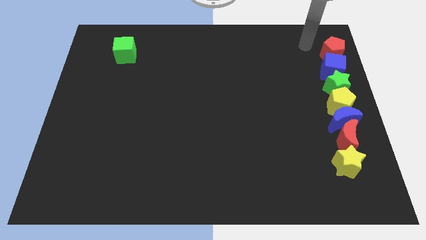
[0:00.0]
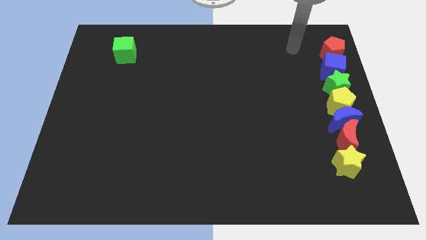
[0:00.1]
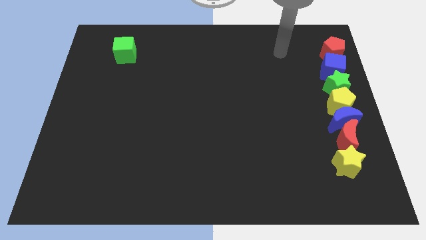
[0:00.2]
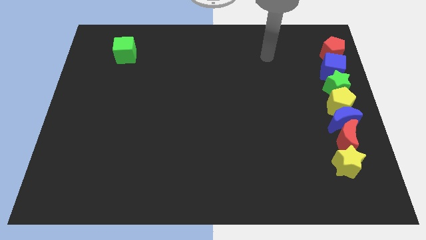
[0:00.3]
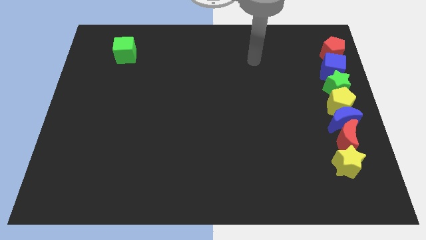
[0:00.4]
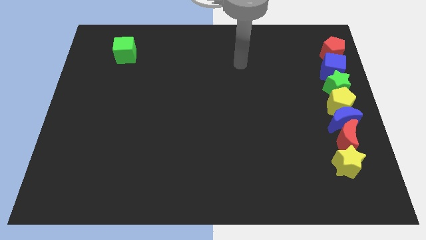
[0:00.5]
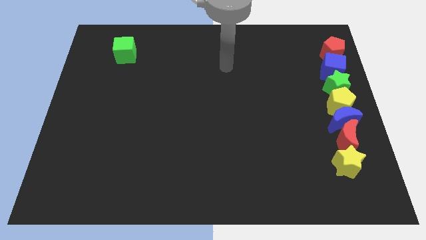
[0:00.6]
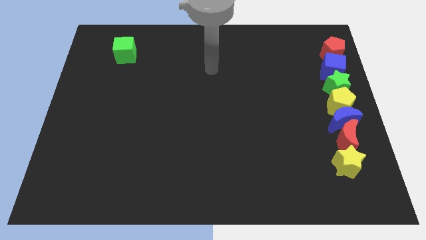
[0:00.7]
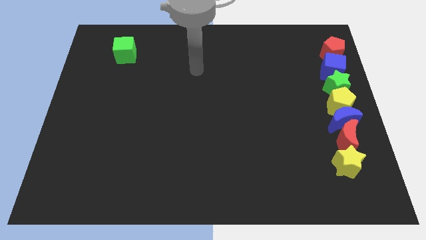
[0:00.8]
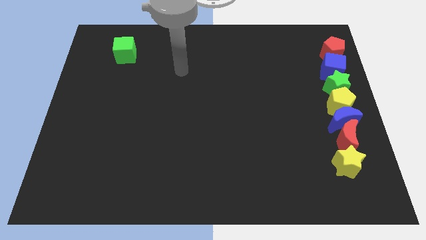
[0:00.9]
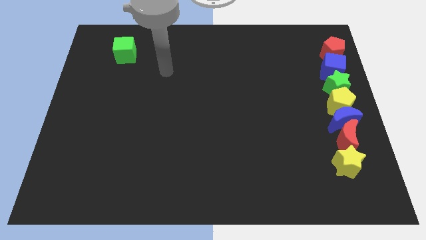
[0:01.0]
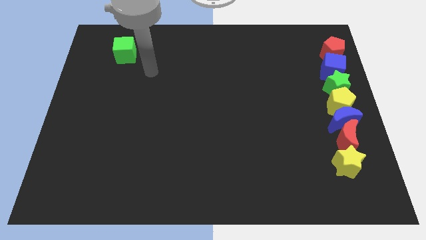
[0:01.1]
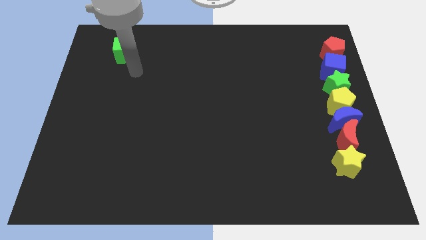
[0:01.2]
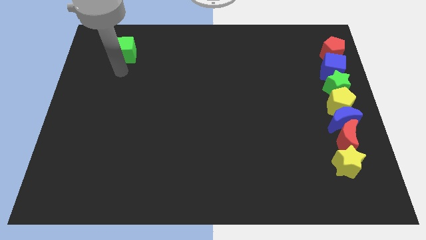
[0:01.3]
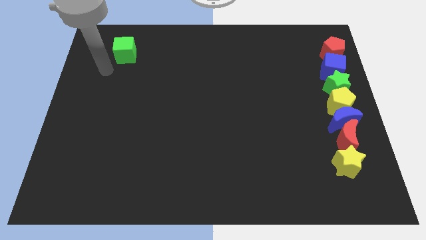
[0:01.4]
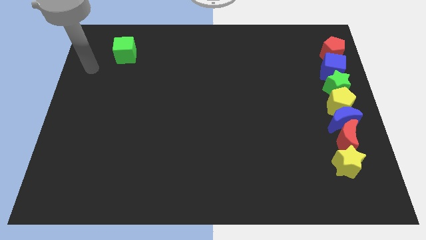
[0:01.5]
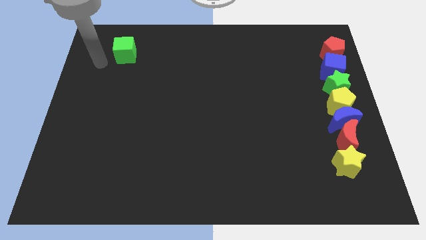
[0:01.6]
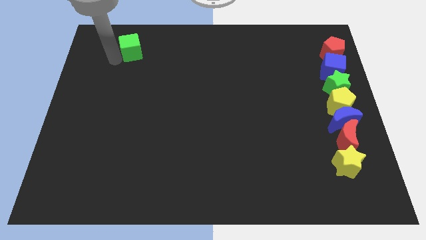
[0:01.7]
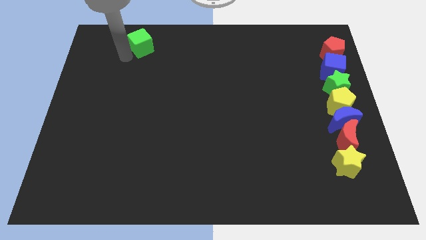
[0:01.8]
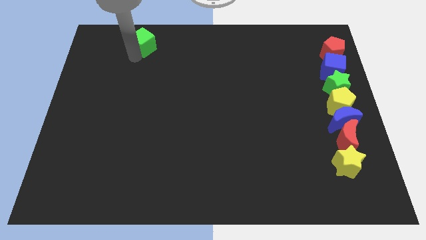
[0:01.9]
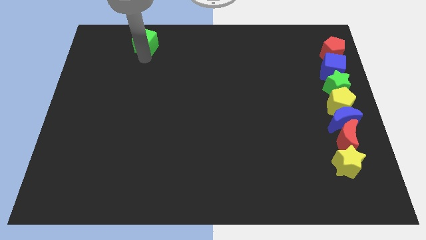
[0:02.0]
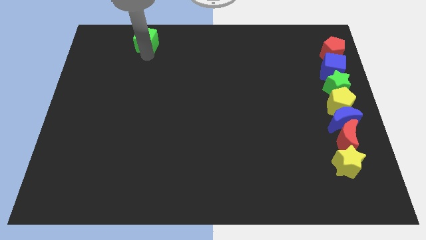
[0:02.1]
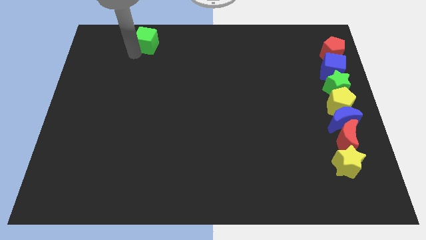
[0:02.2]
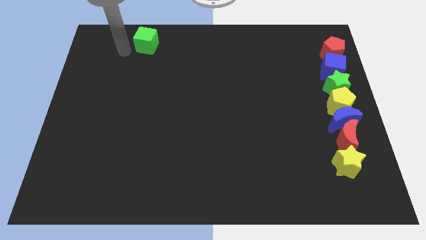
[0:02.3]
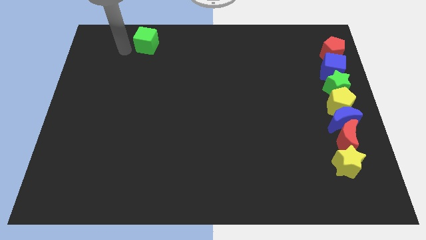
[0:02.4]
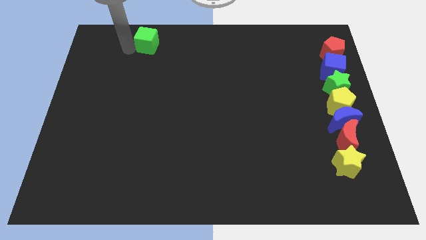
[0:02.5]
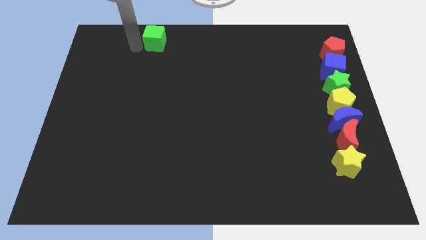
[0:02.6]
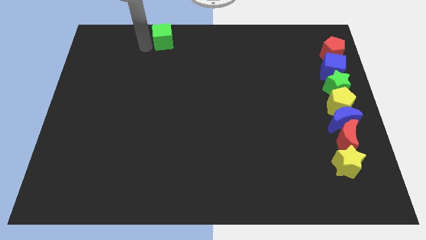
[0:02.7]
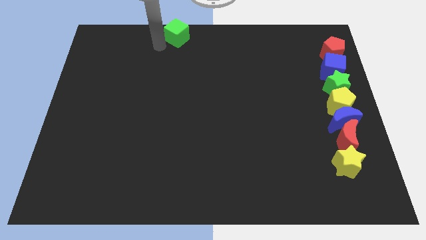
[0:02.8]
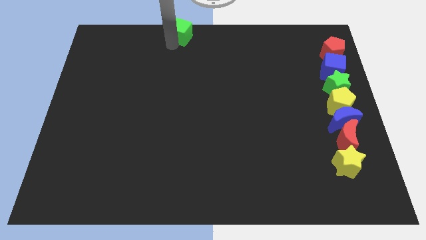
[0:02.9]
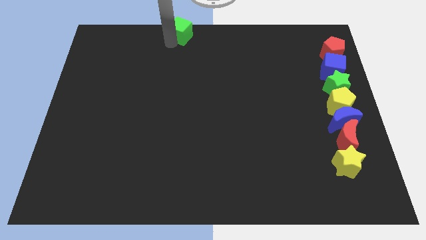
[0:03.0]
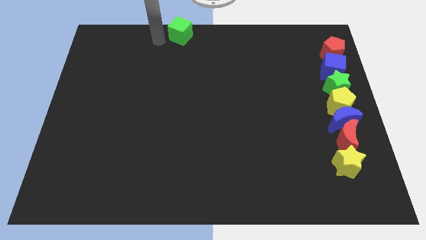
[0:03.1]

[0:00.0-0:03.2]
move the green cube slightly towards the top center of the board

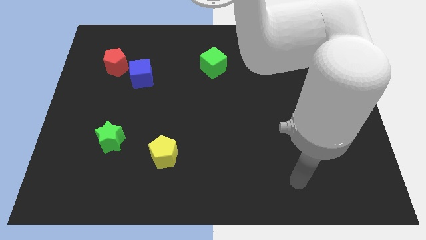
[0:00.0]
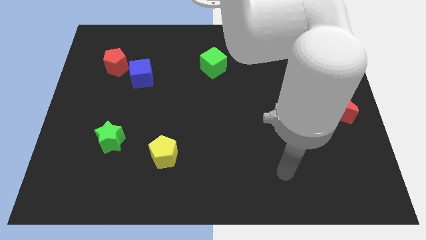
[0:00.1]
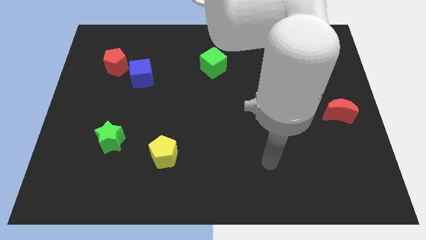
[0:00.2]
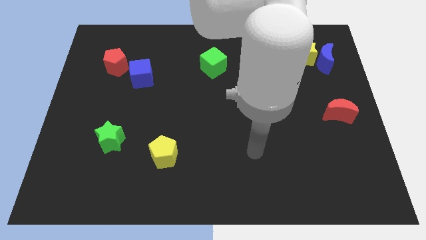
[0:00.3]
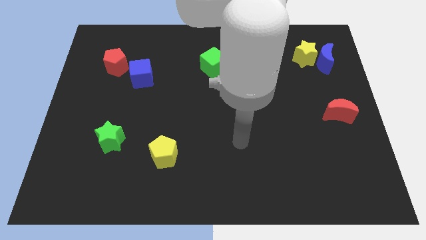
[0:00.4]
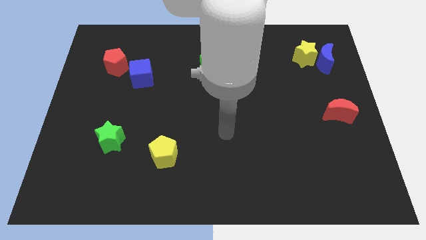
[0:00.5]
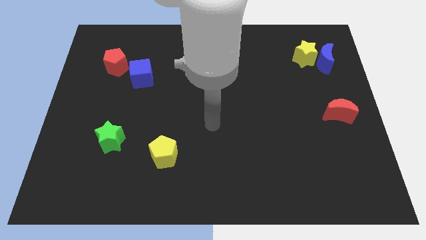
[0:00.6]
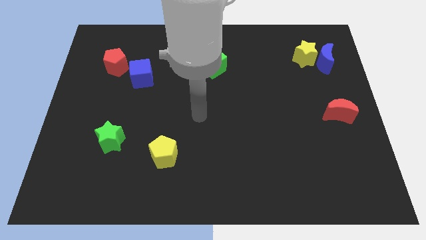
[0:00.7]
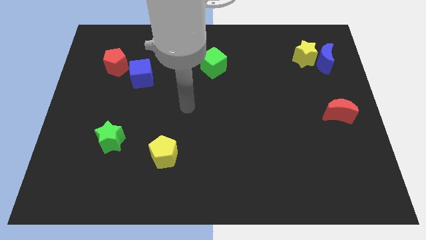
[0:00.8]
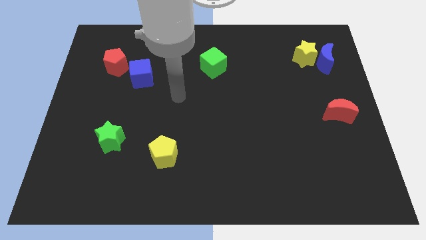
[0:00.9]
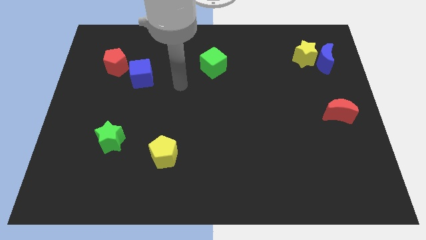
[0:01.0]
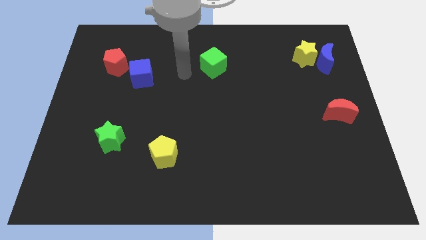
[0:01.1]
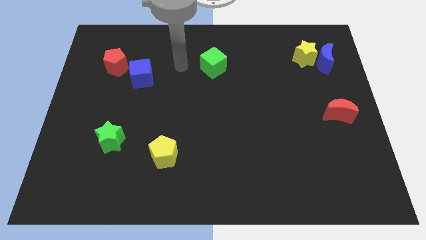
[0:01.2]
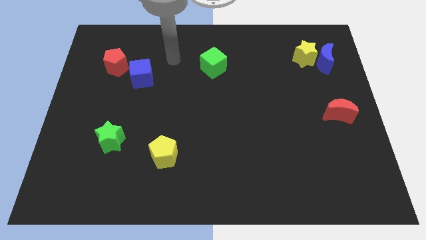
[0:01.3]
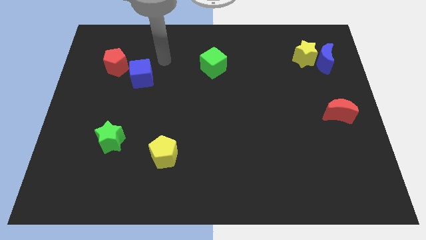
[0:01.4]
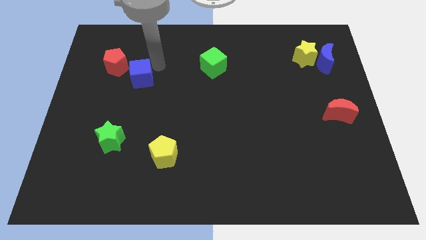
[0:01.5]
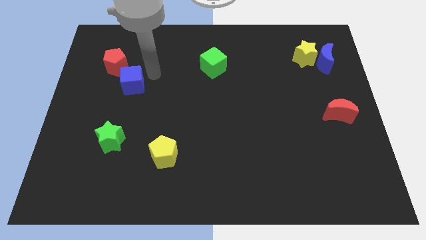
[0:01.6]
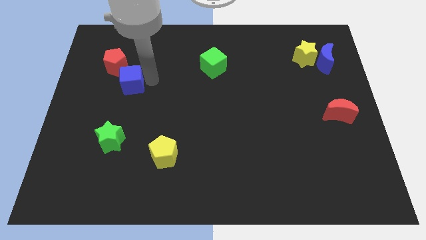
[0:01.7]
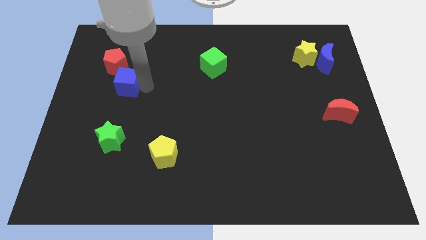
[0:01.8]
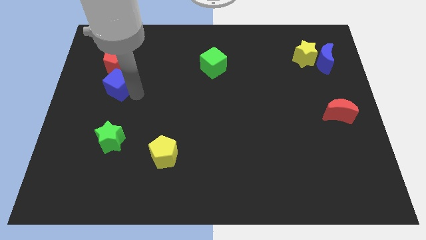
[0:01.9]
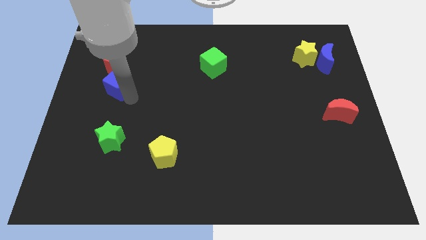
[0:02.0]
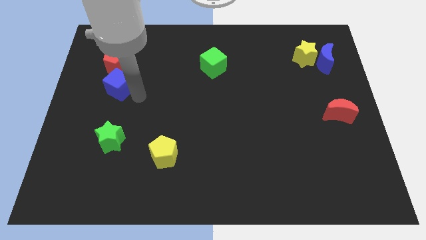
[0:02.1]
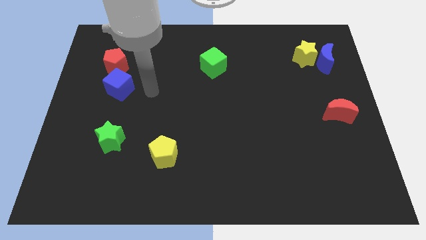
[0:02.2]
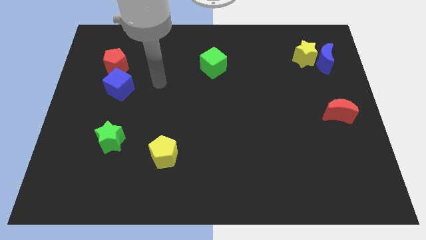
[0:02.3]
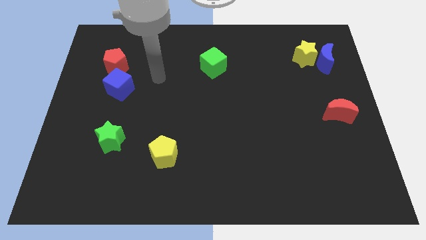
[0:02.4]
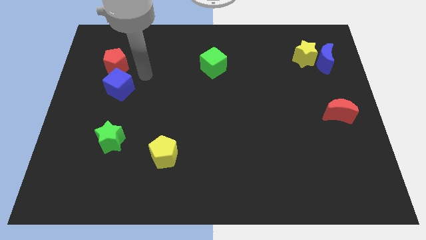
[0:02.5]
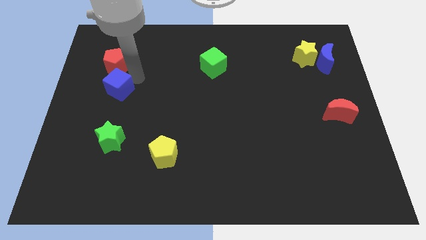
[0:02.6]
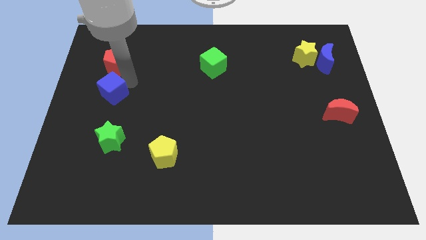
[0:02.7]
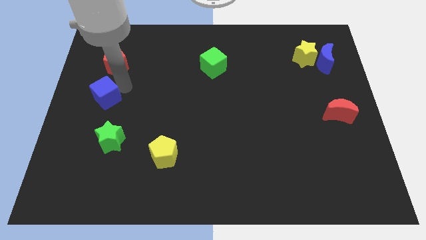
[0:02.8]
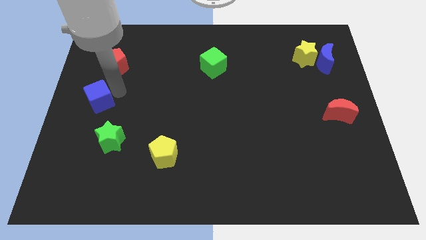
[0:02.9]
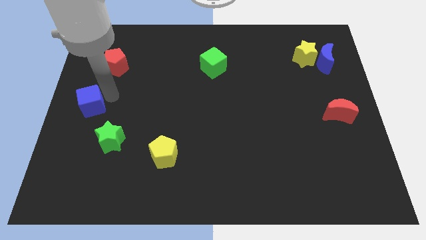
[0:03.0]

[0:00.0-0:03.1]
slightly move the blue cube towards the left center

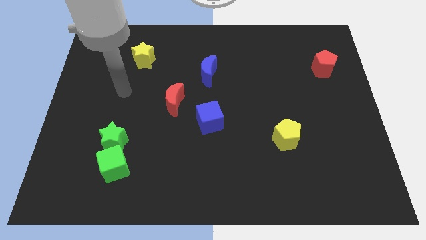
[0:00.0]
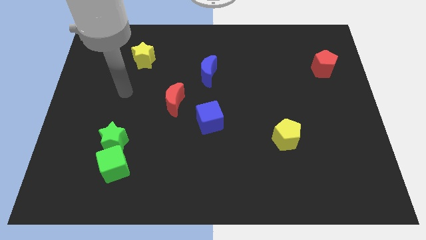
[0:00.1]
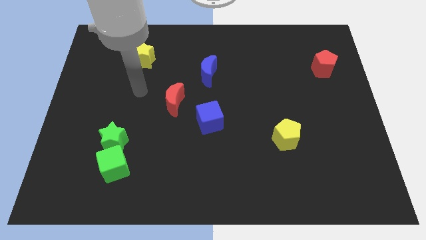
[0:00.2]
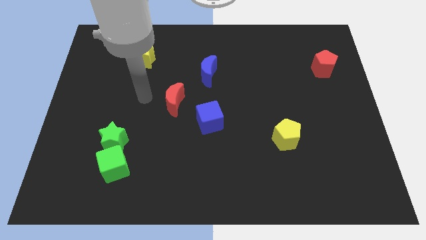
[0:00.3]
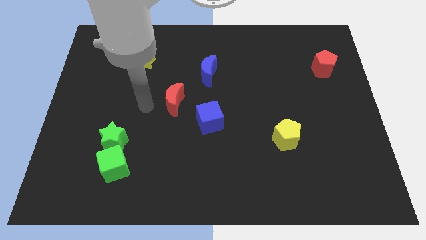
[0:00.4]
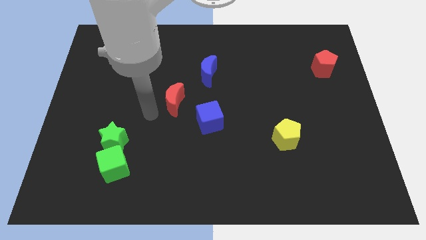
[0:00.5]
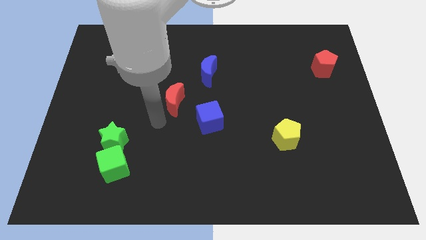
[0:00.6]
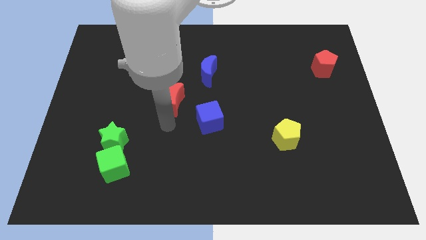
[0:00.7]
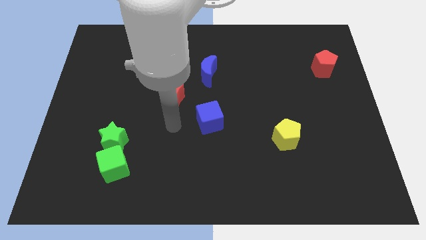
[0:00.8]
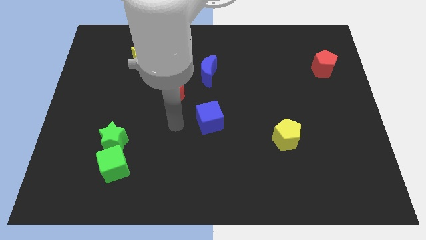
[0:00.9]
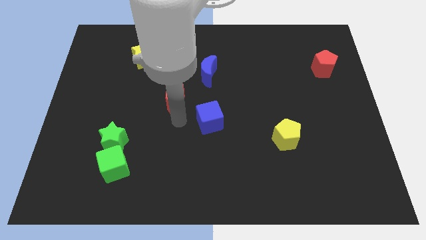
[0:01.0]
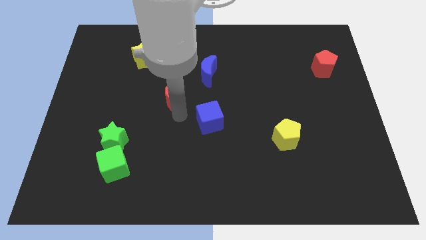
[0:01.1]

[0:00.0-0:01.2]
touch the red moon

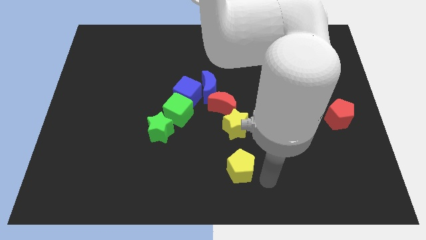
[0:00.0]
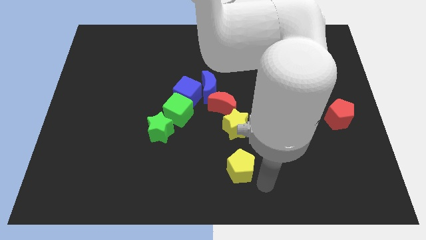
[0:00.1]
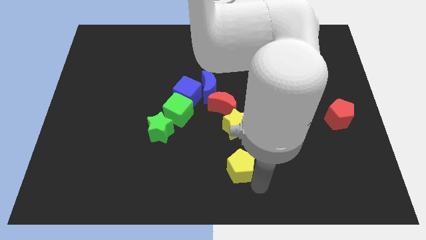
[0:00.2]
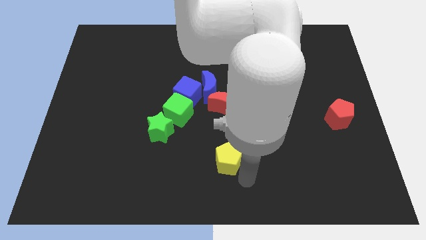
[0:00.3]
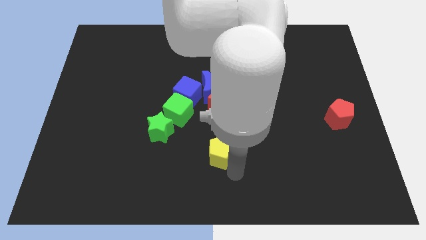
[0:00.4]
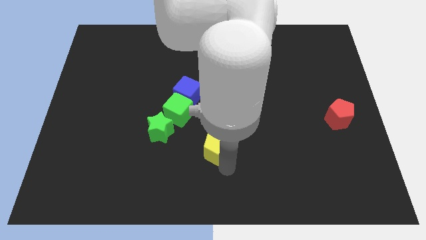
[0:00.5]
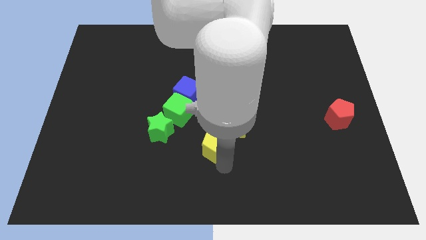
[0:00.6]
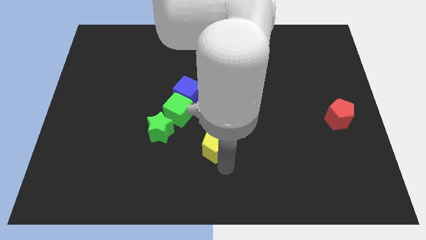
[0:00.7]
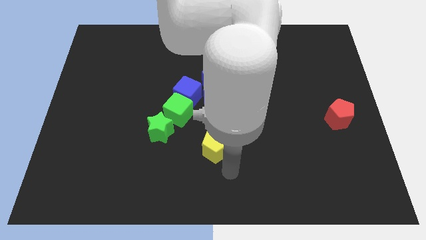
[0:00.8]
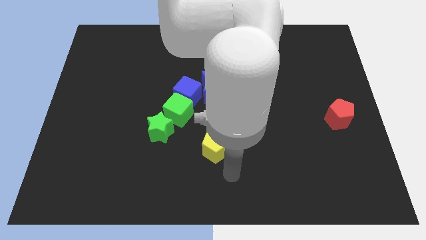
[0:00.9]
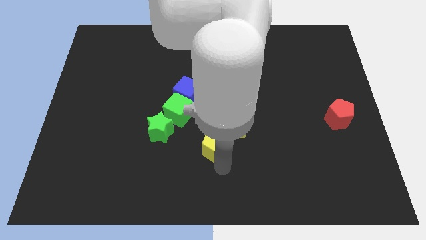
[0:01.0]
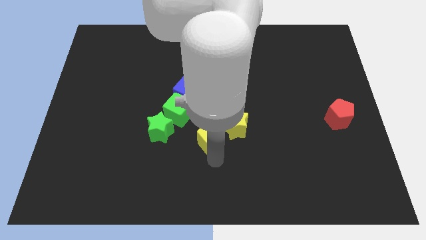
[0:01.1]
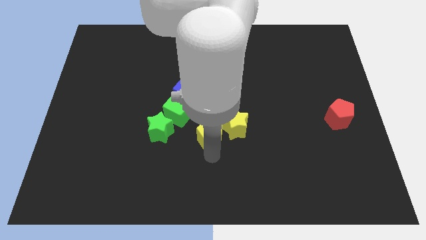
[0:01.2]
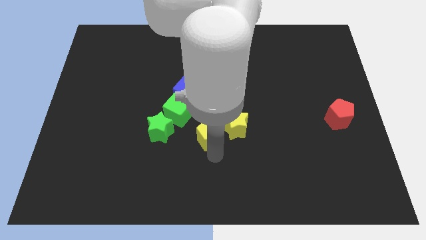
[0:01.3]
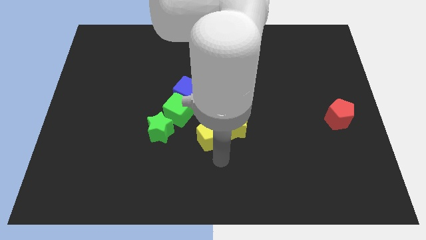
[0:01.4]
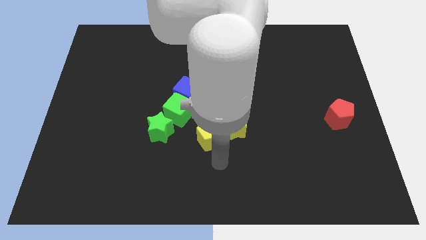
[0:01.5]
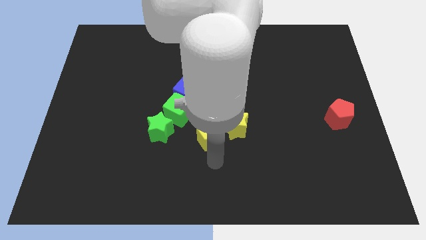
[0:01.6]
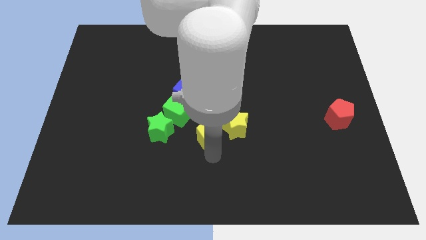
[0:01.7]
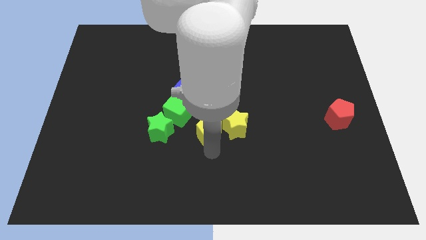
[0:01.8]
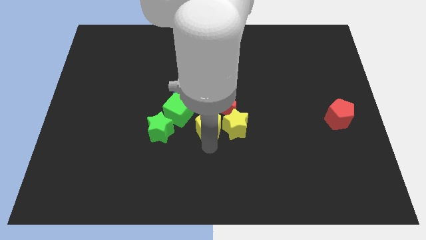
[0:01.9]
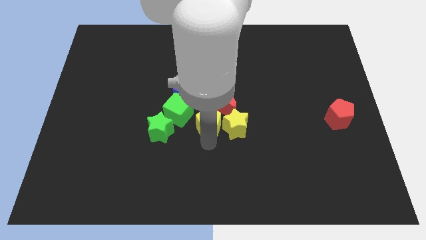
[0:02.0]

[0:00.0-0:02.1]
push the yellow pentagon to the left of the yellow star
